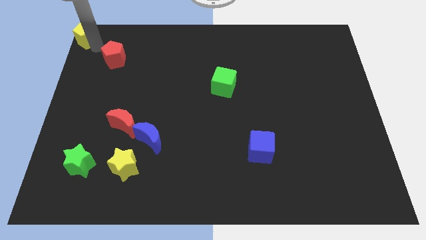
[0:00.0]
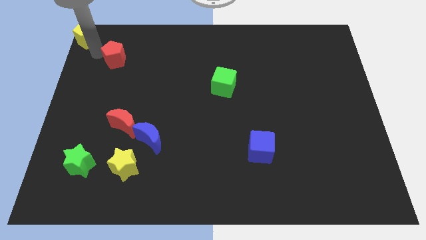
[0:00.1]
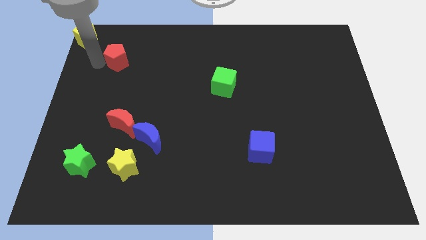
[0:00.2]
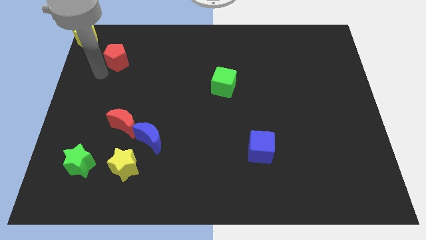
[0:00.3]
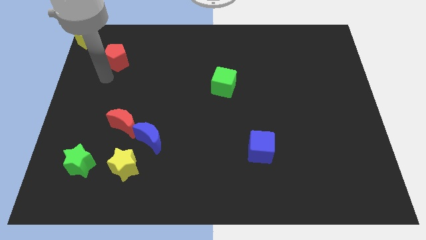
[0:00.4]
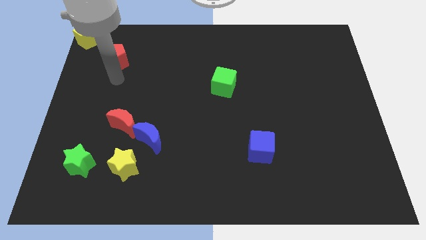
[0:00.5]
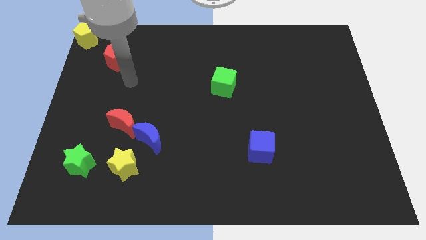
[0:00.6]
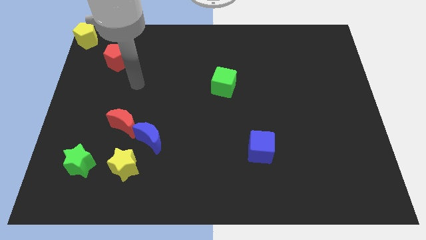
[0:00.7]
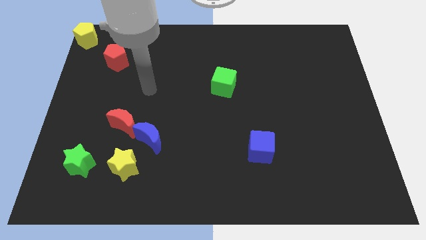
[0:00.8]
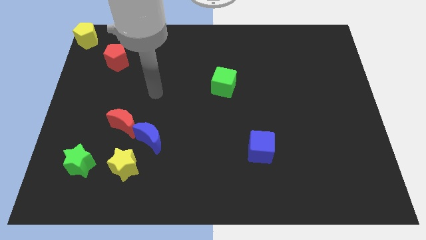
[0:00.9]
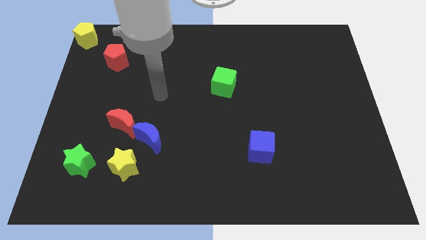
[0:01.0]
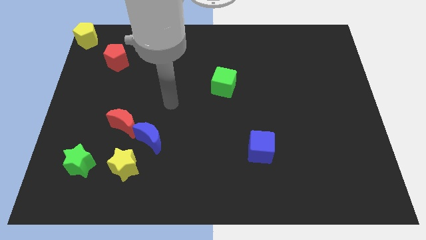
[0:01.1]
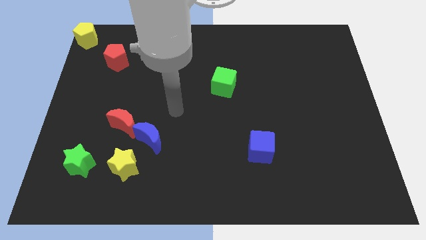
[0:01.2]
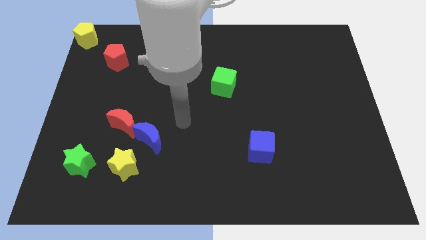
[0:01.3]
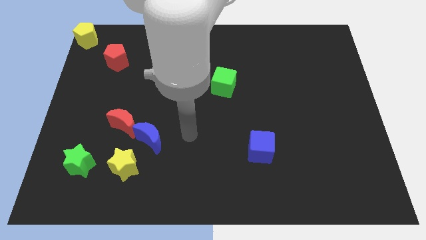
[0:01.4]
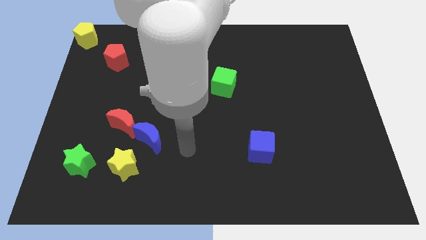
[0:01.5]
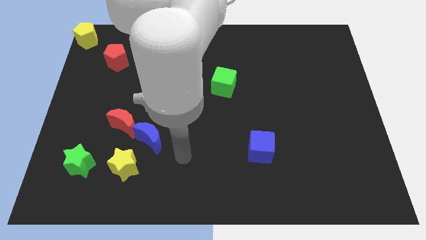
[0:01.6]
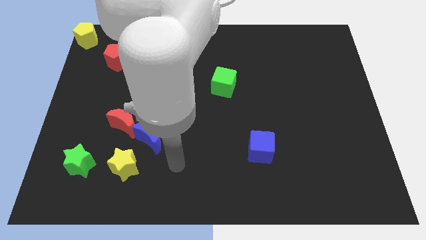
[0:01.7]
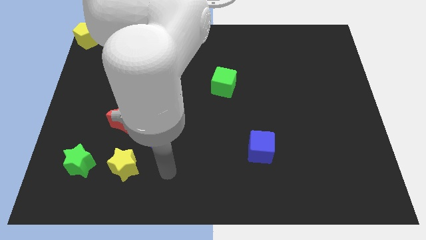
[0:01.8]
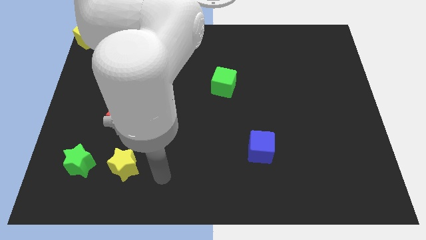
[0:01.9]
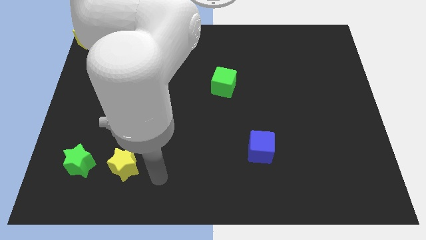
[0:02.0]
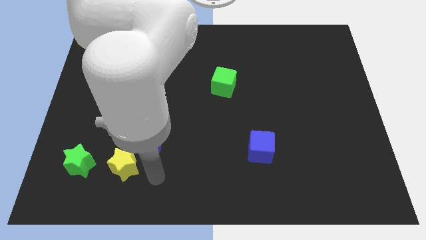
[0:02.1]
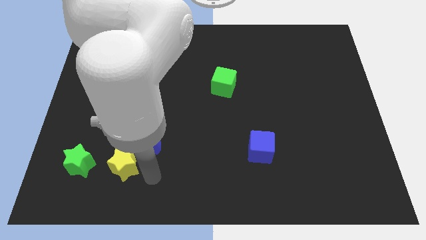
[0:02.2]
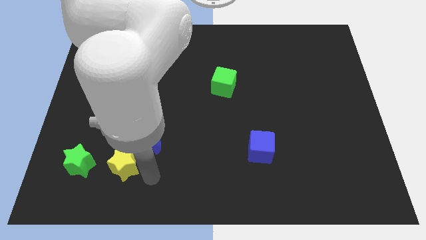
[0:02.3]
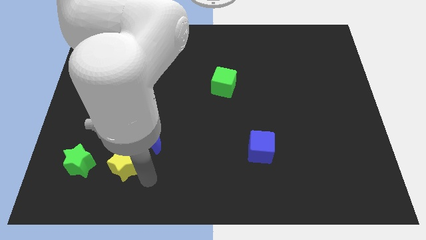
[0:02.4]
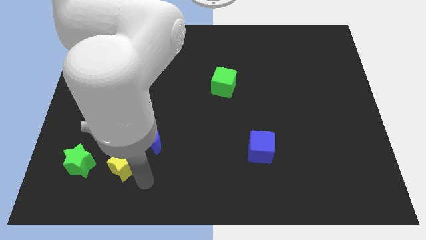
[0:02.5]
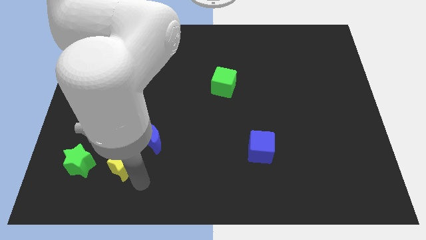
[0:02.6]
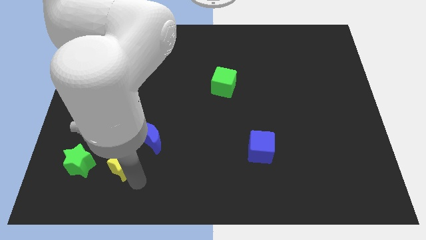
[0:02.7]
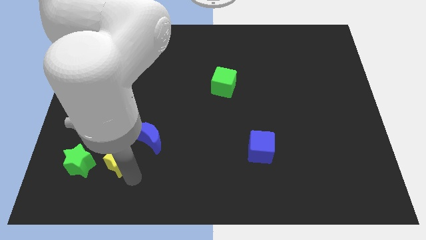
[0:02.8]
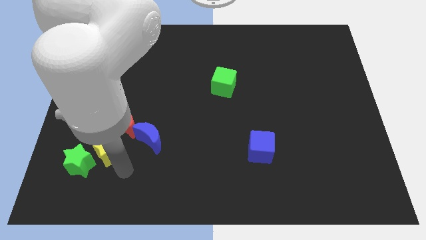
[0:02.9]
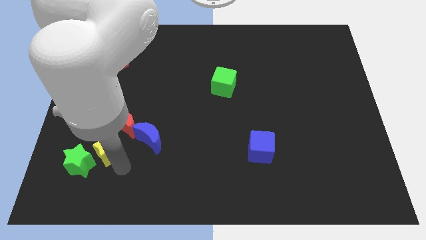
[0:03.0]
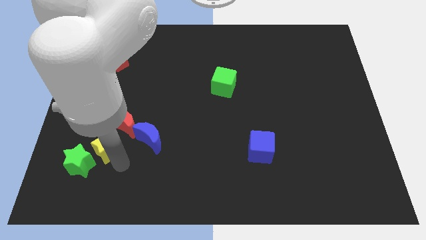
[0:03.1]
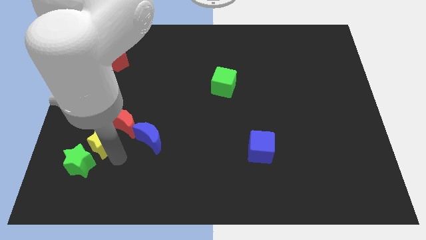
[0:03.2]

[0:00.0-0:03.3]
move the yellow star diagonally in between the red crescent and green star

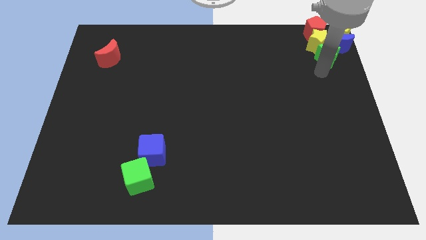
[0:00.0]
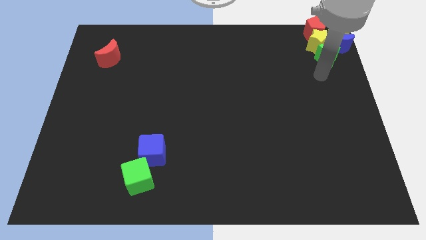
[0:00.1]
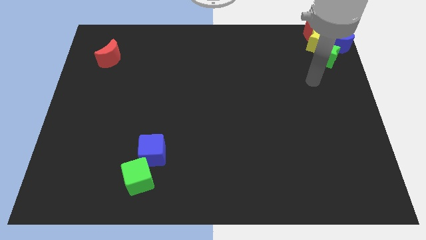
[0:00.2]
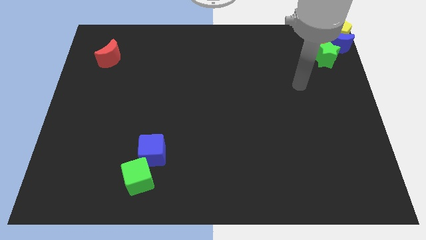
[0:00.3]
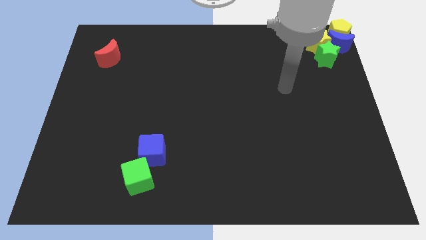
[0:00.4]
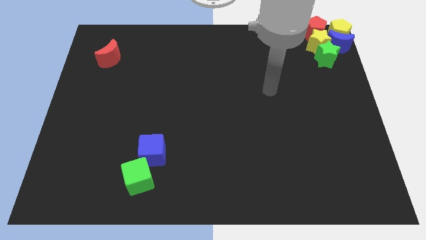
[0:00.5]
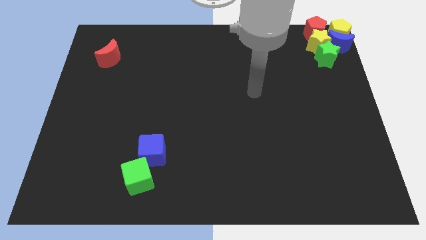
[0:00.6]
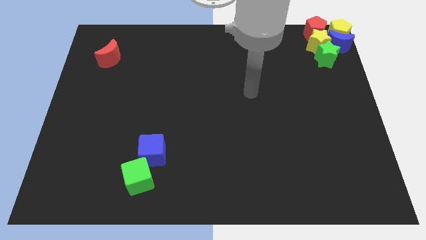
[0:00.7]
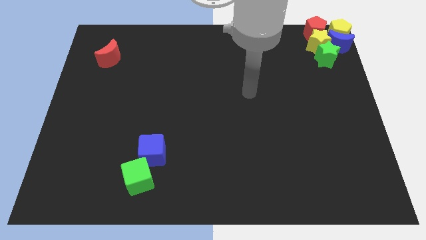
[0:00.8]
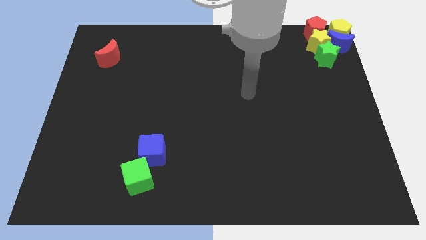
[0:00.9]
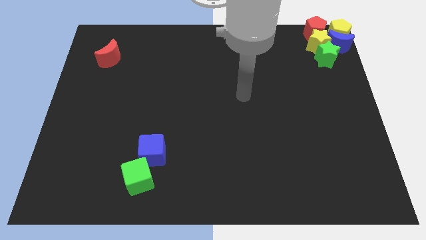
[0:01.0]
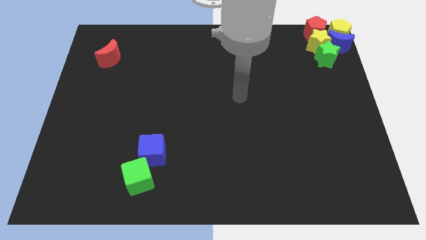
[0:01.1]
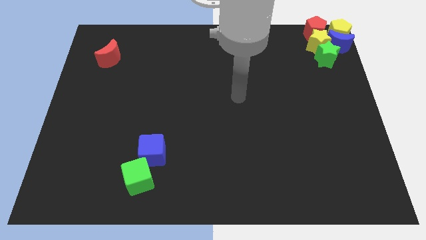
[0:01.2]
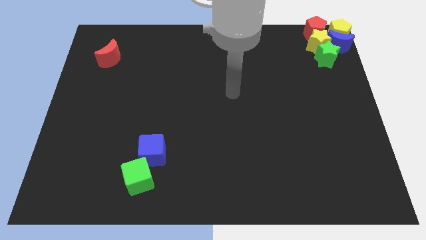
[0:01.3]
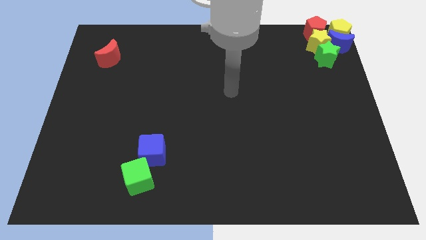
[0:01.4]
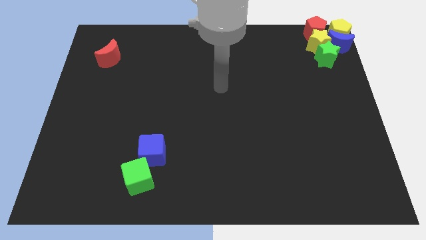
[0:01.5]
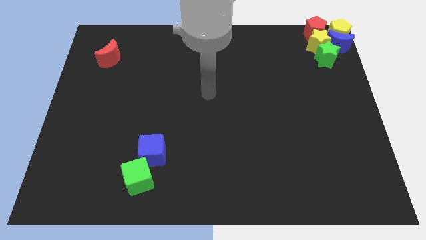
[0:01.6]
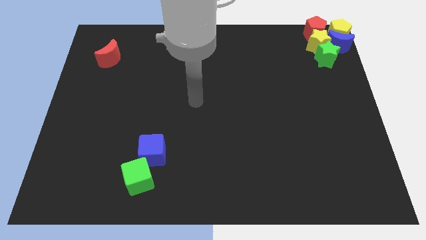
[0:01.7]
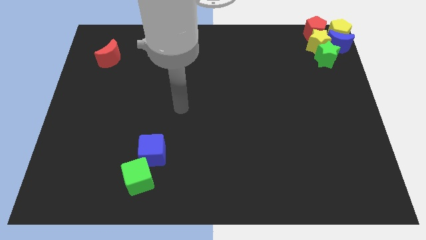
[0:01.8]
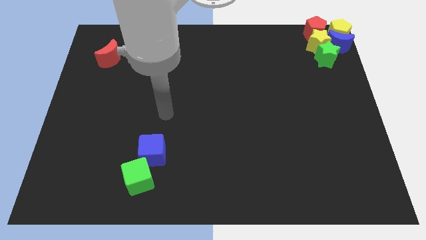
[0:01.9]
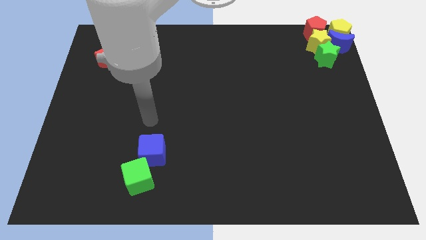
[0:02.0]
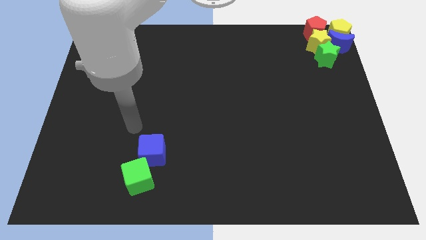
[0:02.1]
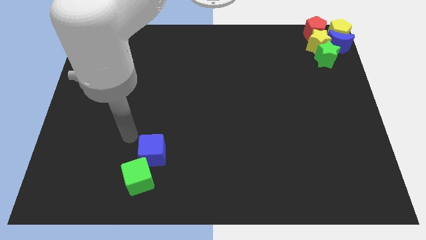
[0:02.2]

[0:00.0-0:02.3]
move your arm away from the green star

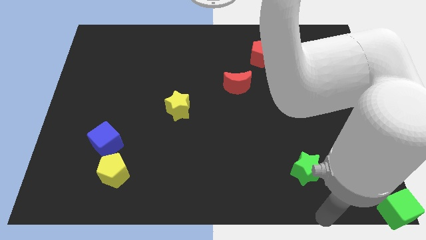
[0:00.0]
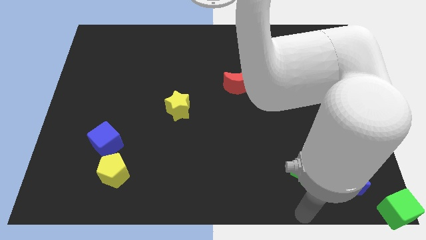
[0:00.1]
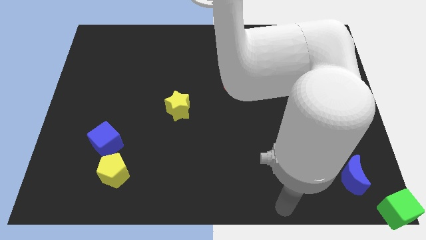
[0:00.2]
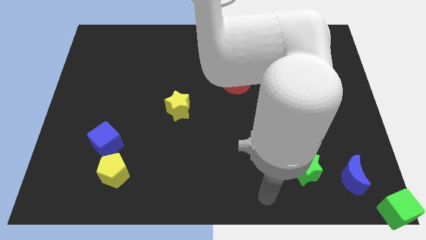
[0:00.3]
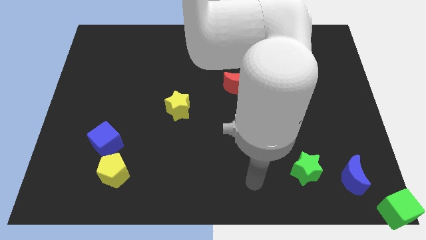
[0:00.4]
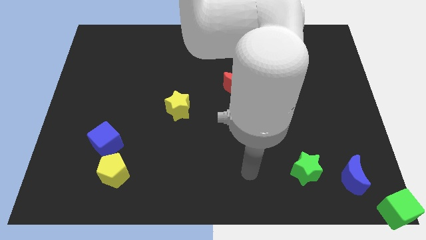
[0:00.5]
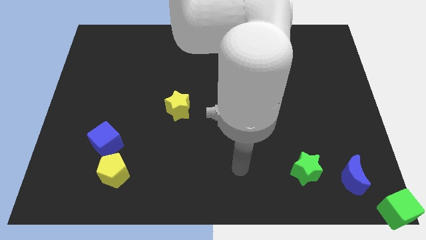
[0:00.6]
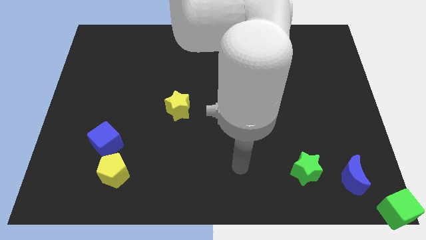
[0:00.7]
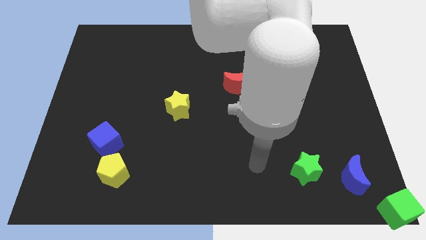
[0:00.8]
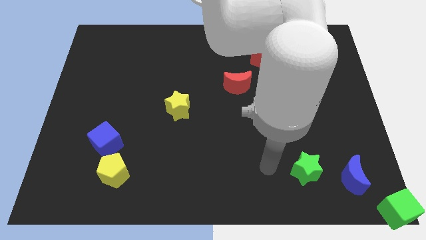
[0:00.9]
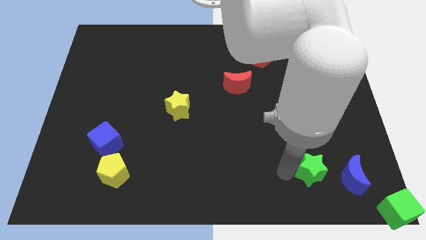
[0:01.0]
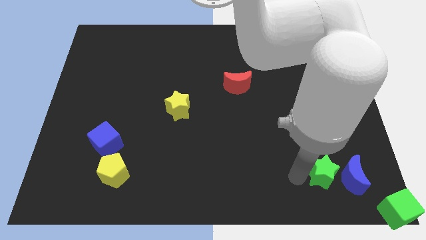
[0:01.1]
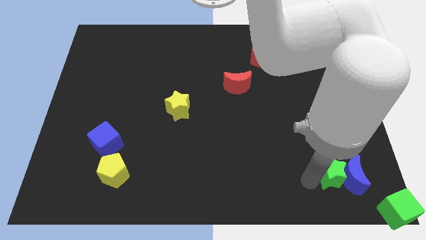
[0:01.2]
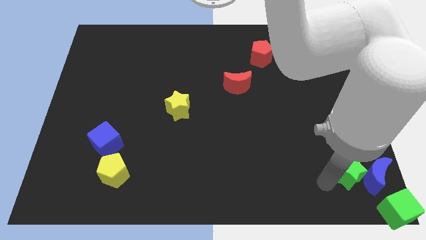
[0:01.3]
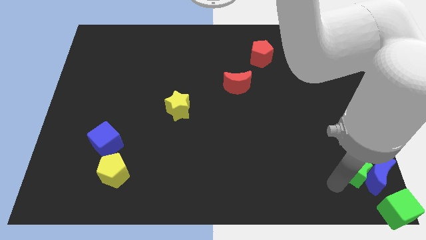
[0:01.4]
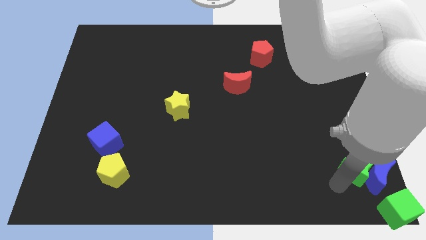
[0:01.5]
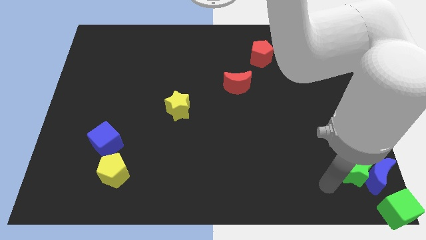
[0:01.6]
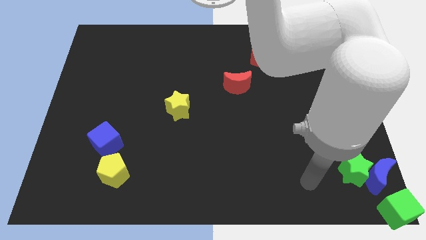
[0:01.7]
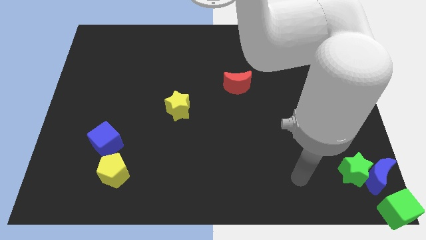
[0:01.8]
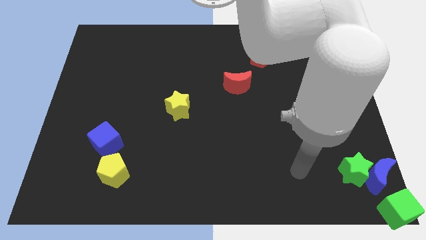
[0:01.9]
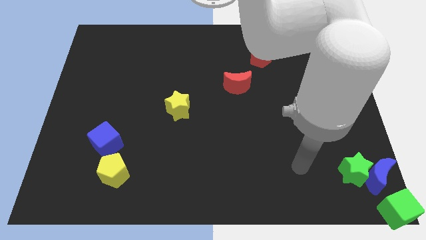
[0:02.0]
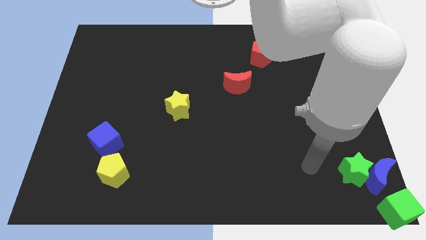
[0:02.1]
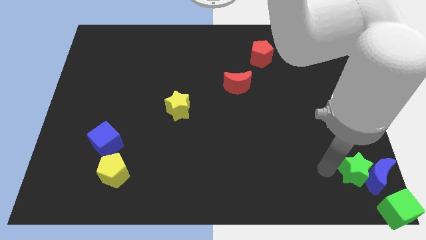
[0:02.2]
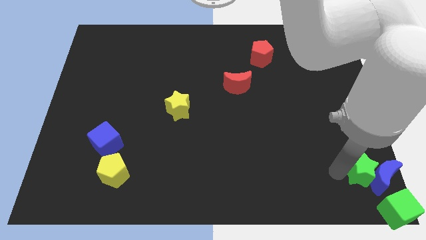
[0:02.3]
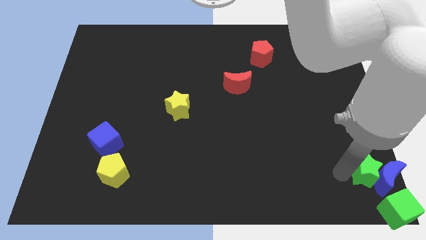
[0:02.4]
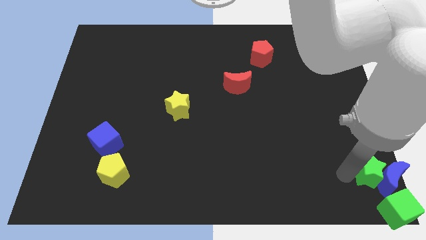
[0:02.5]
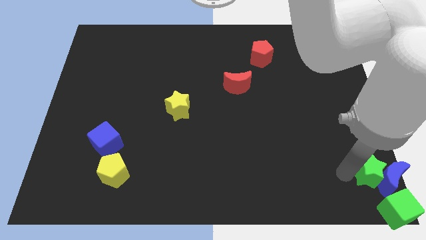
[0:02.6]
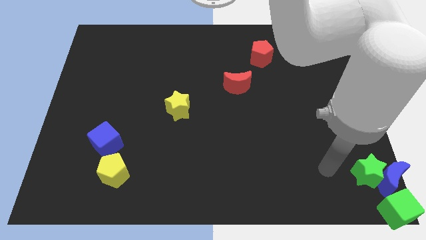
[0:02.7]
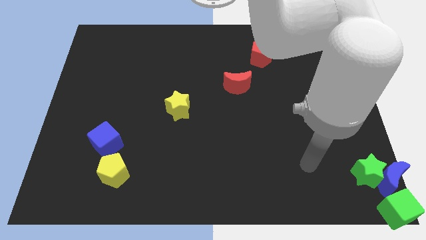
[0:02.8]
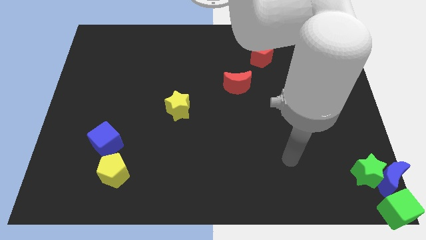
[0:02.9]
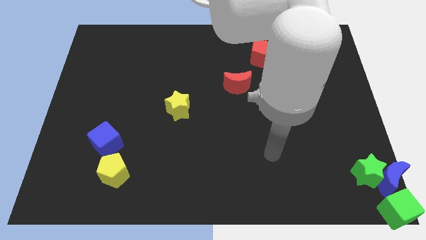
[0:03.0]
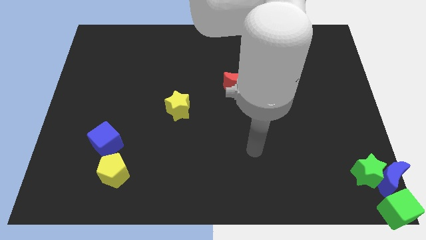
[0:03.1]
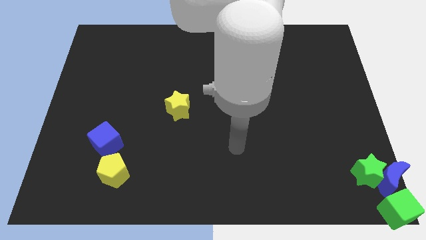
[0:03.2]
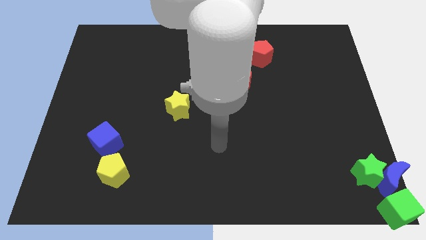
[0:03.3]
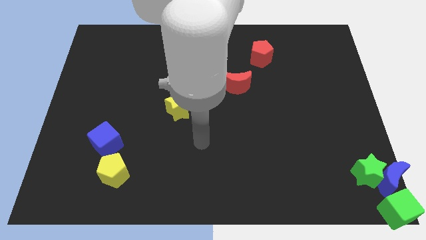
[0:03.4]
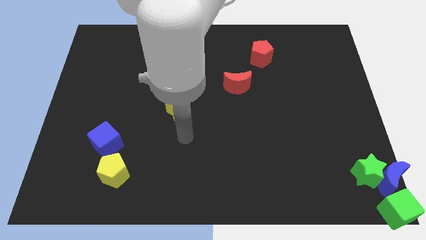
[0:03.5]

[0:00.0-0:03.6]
push the green star to the left of the blue crescent
